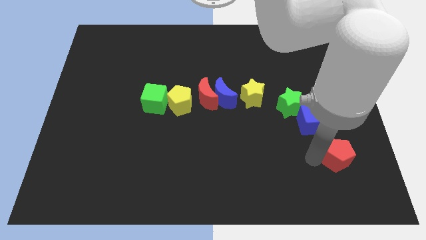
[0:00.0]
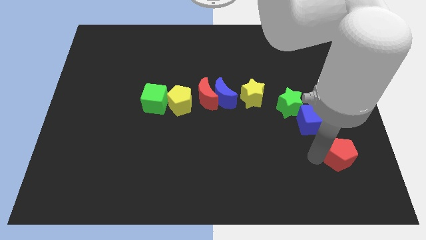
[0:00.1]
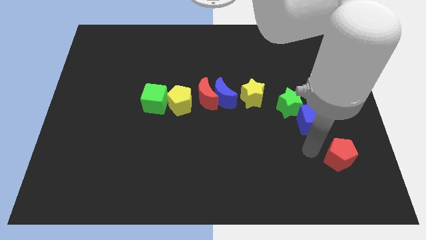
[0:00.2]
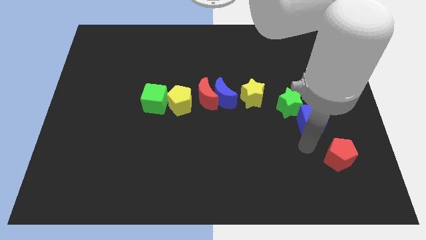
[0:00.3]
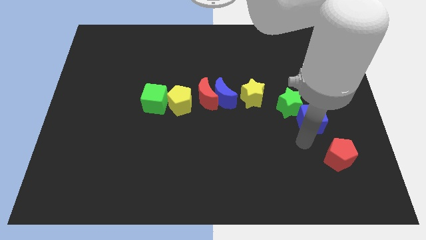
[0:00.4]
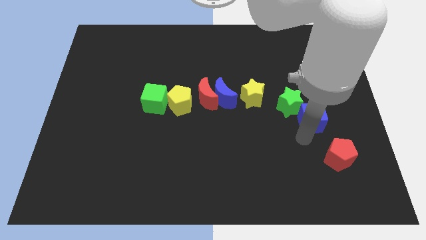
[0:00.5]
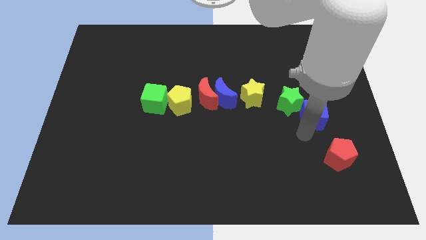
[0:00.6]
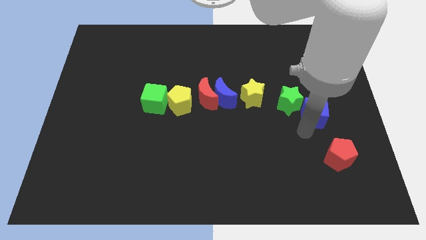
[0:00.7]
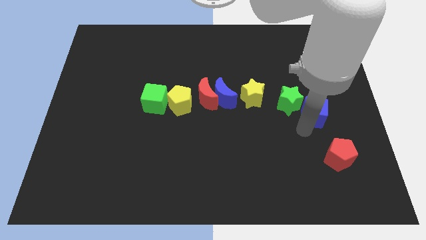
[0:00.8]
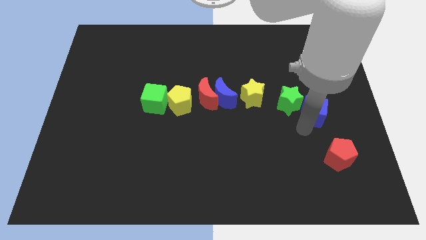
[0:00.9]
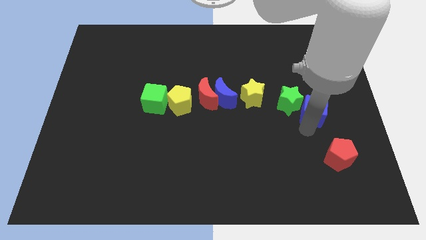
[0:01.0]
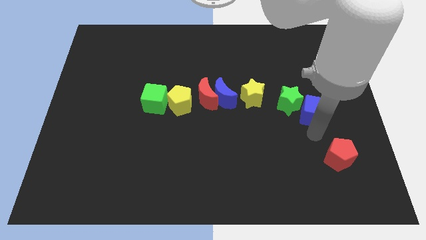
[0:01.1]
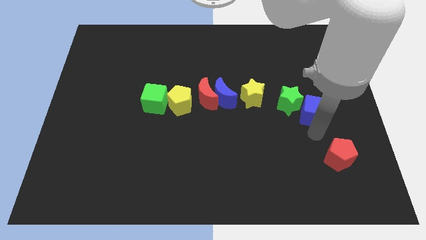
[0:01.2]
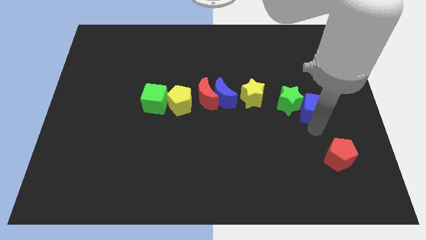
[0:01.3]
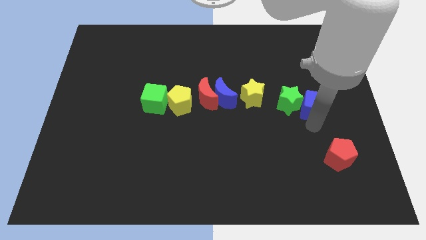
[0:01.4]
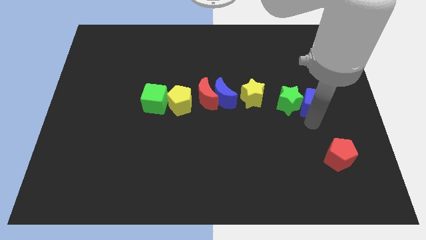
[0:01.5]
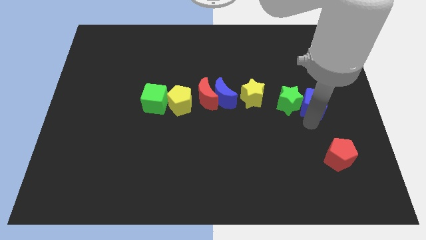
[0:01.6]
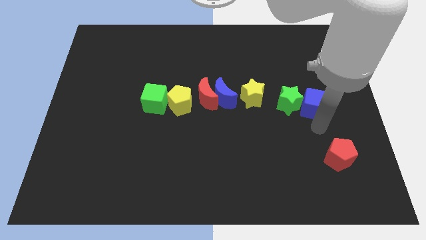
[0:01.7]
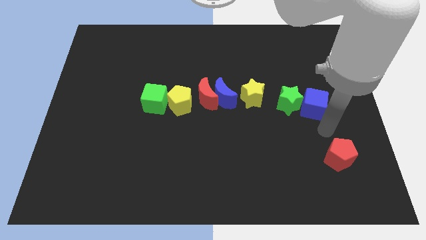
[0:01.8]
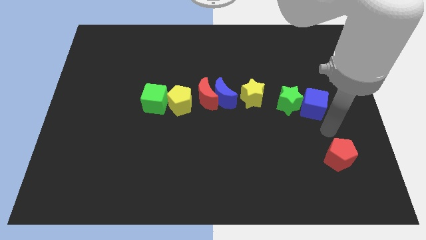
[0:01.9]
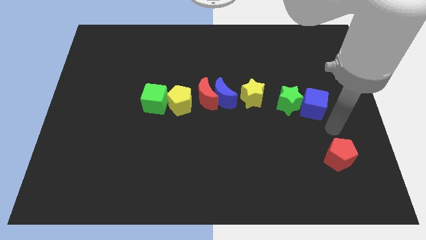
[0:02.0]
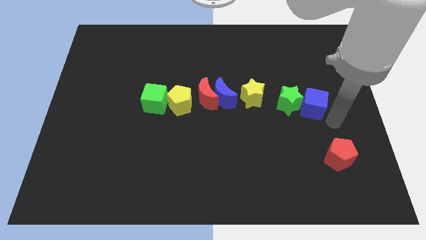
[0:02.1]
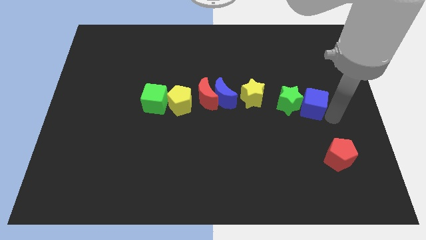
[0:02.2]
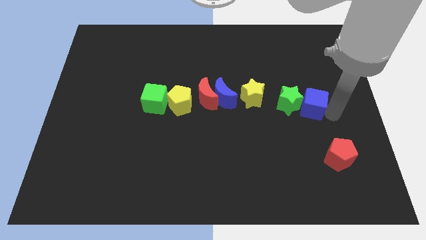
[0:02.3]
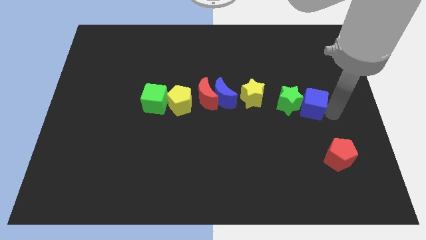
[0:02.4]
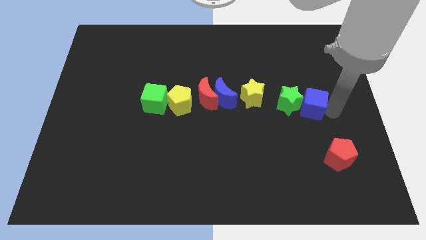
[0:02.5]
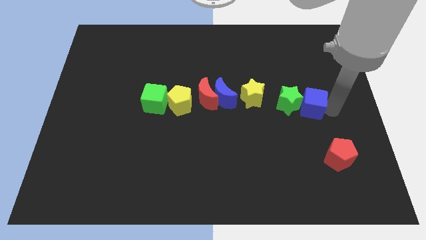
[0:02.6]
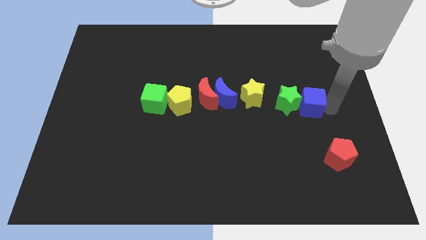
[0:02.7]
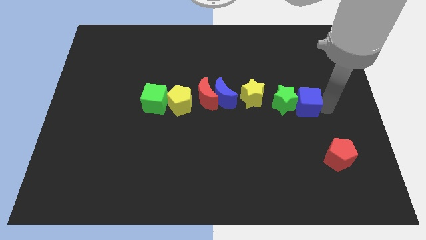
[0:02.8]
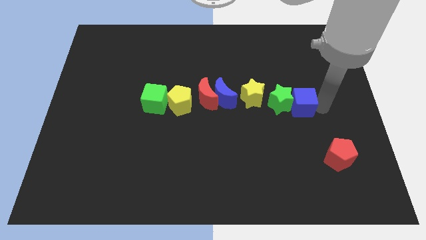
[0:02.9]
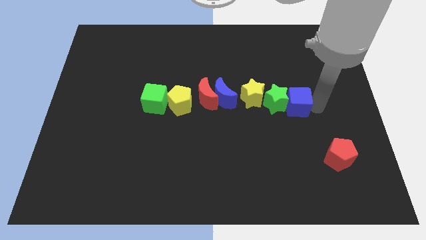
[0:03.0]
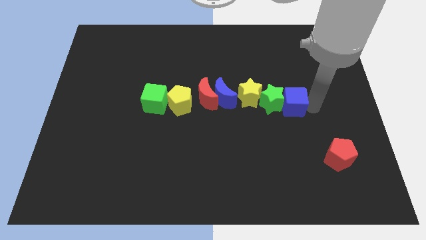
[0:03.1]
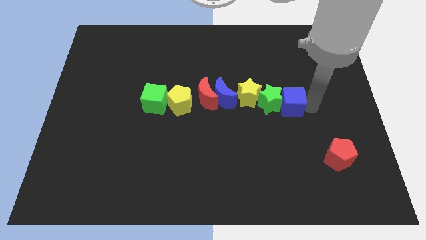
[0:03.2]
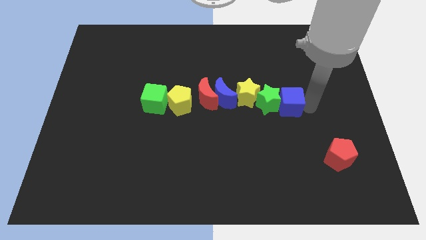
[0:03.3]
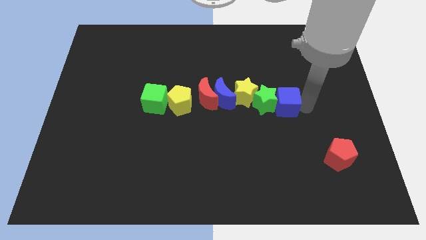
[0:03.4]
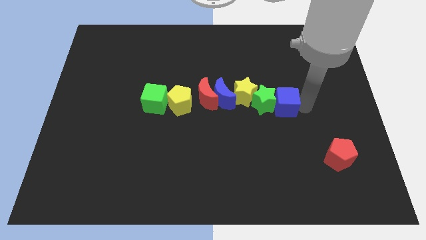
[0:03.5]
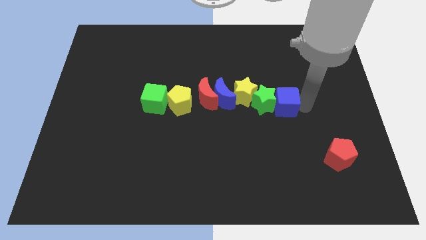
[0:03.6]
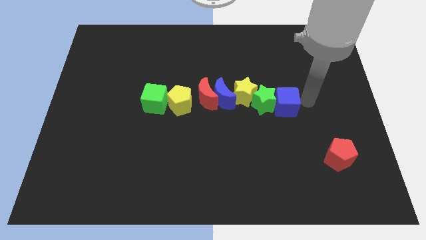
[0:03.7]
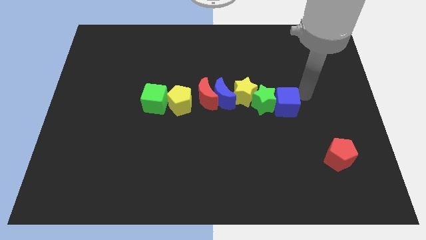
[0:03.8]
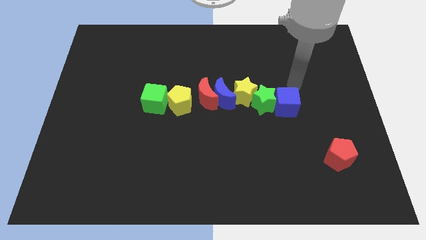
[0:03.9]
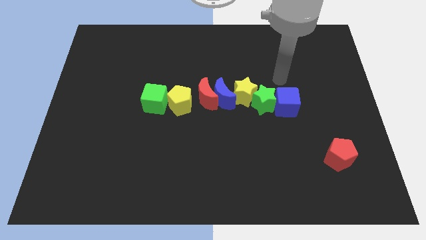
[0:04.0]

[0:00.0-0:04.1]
push blue cube along with green star into yellow star

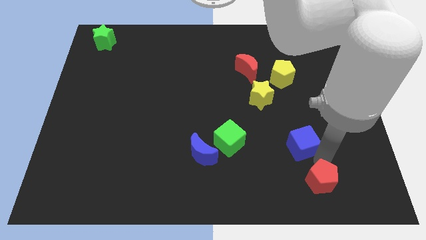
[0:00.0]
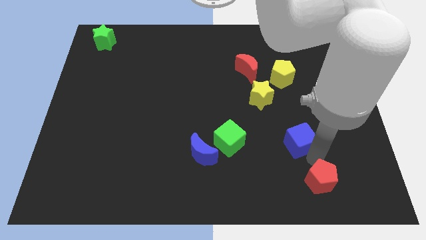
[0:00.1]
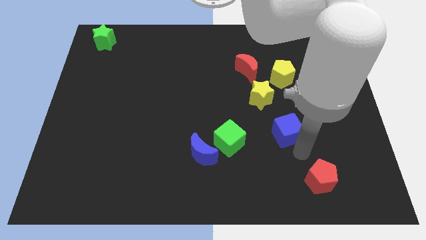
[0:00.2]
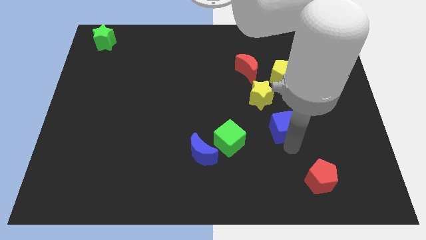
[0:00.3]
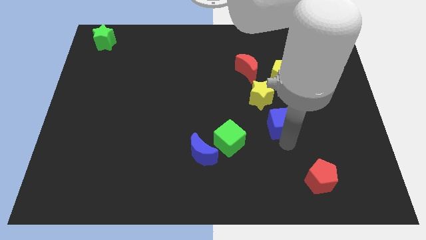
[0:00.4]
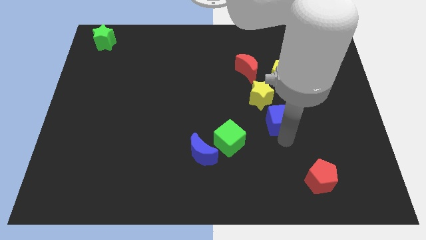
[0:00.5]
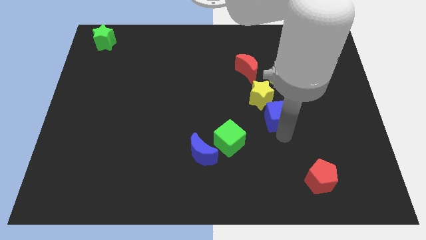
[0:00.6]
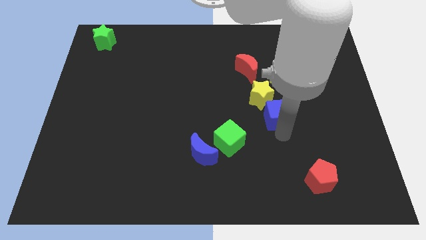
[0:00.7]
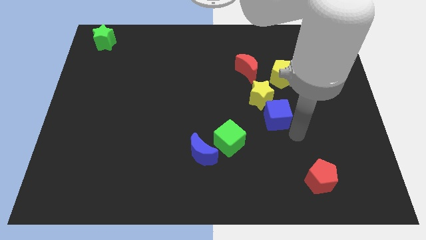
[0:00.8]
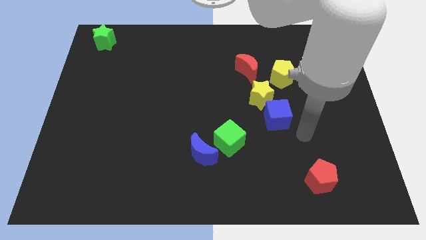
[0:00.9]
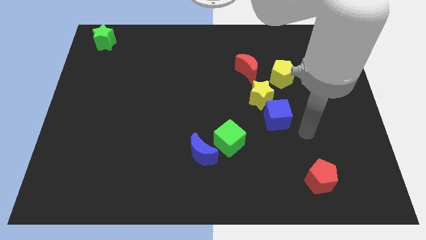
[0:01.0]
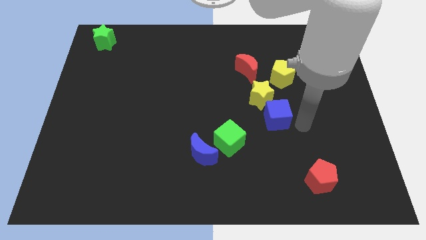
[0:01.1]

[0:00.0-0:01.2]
slide the blue cube diagonally top right to the green cube

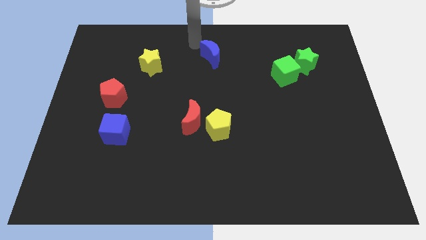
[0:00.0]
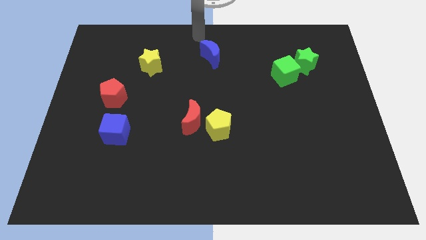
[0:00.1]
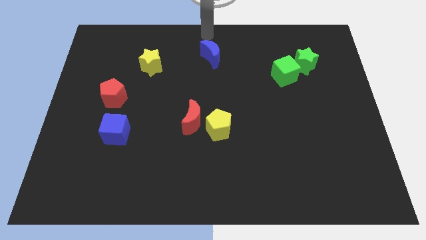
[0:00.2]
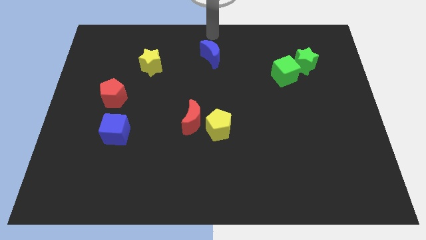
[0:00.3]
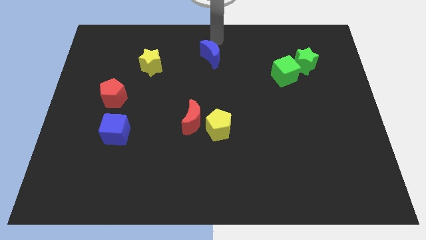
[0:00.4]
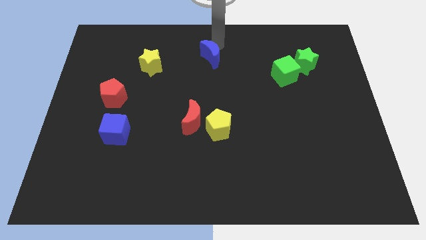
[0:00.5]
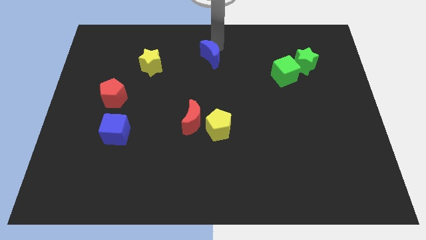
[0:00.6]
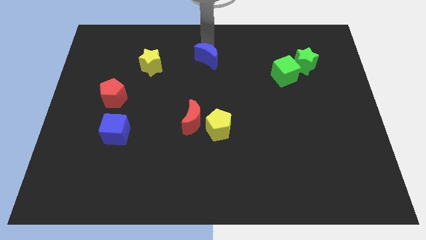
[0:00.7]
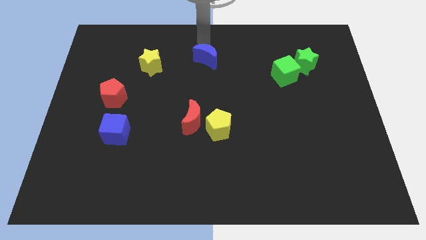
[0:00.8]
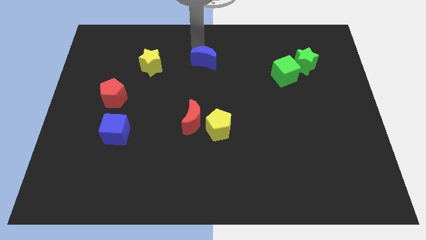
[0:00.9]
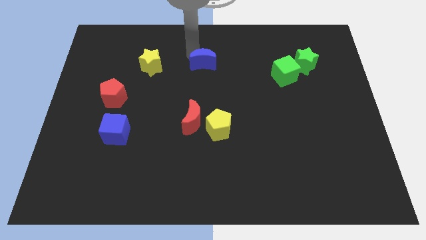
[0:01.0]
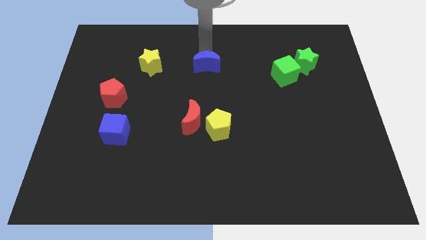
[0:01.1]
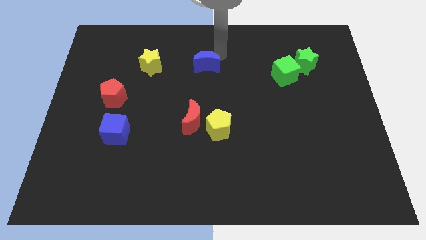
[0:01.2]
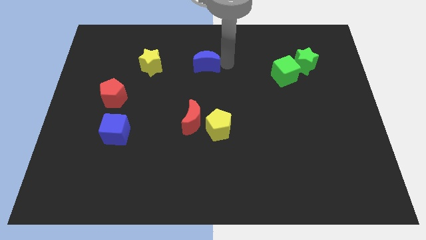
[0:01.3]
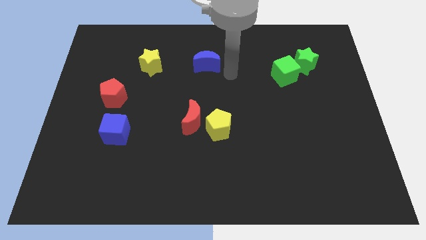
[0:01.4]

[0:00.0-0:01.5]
push the blue moon downwards slightly

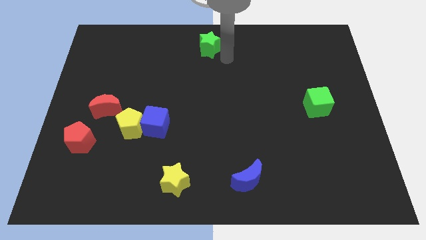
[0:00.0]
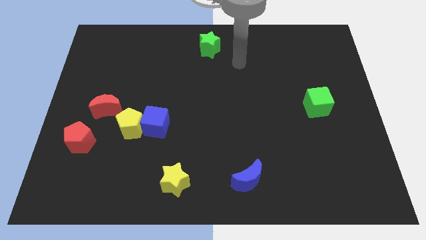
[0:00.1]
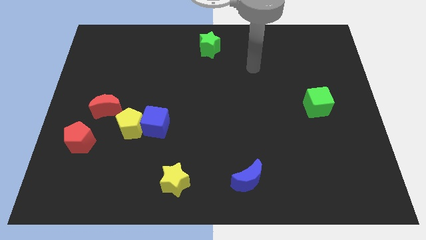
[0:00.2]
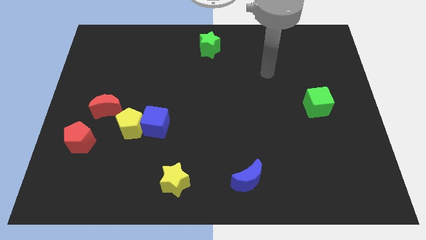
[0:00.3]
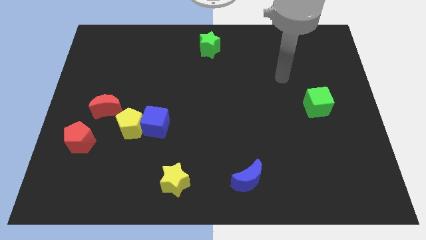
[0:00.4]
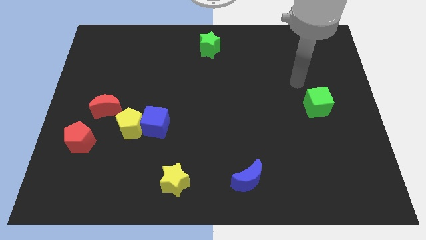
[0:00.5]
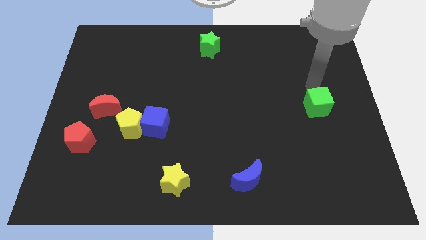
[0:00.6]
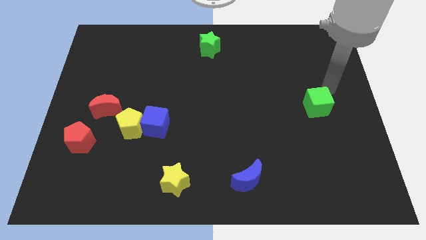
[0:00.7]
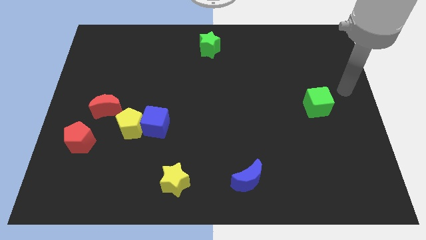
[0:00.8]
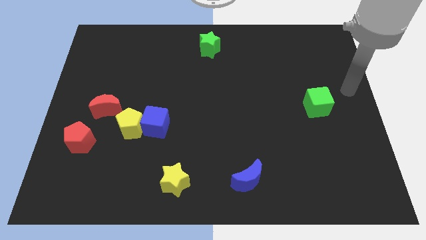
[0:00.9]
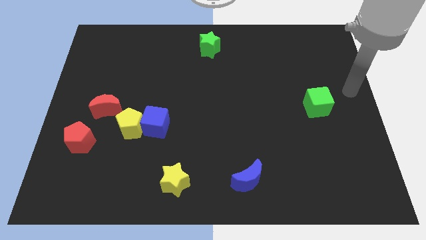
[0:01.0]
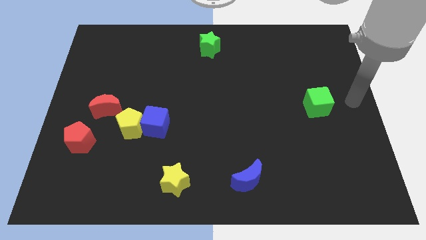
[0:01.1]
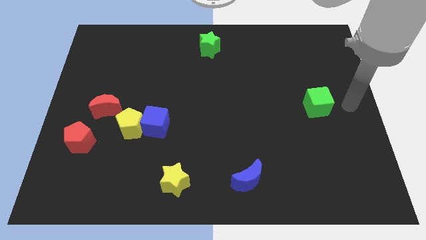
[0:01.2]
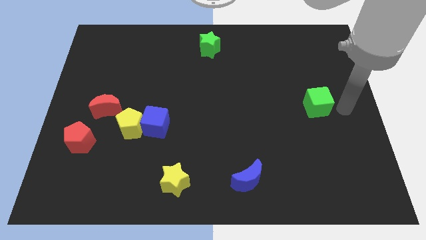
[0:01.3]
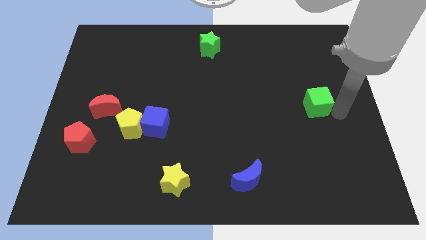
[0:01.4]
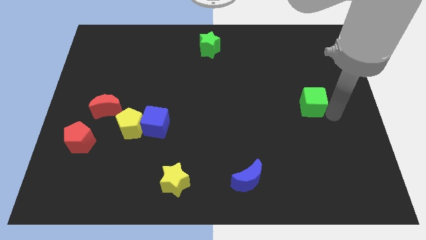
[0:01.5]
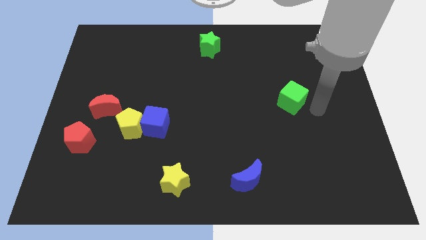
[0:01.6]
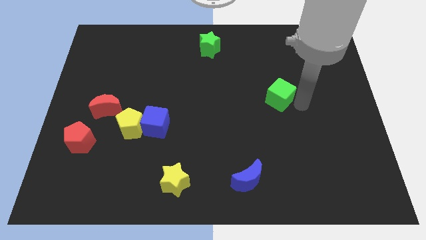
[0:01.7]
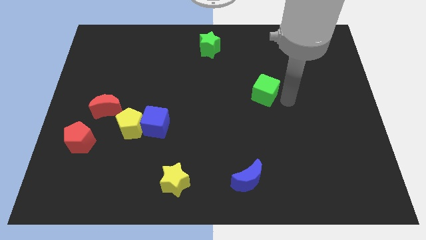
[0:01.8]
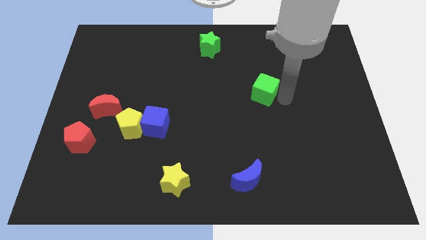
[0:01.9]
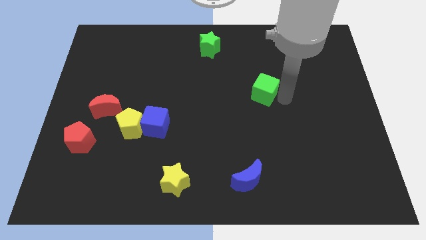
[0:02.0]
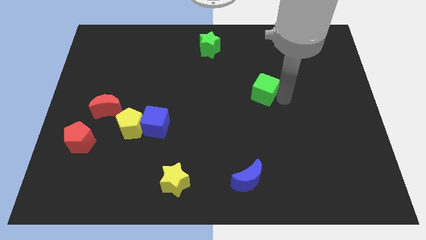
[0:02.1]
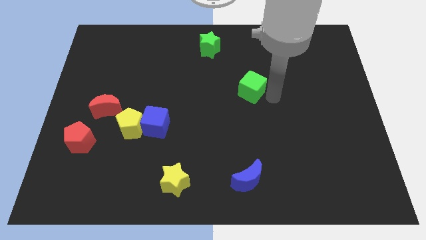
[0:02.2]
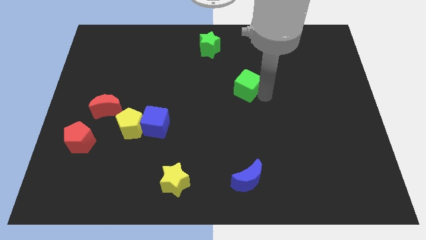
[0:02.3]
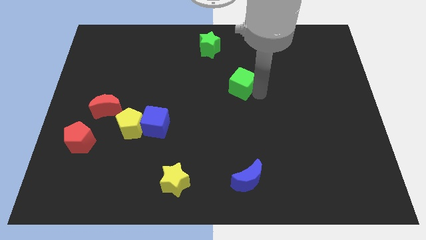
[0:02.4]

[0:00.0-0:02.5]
move the green cube slightly right
